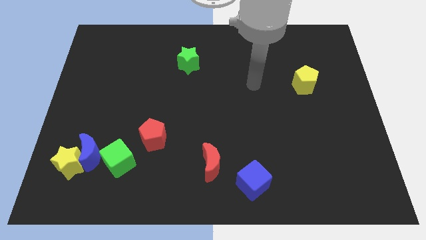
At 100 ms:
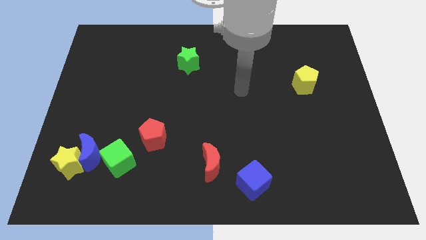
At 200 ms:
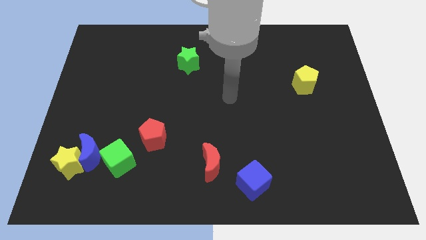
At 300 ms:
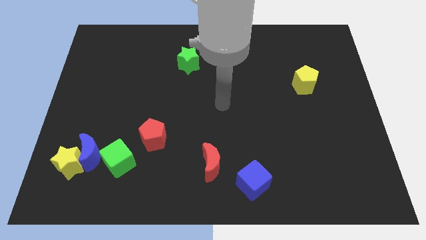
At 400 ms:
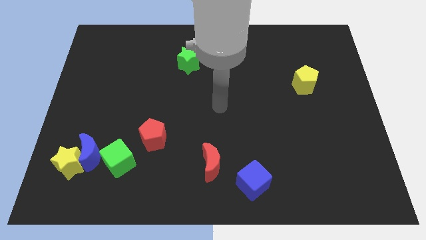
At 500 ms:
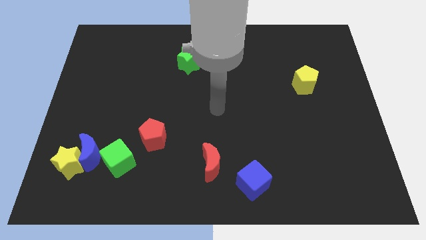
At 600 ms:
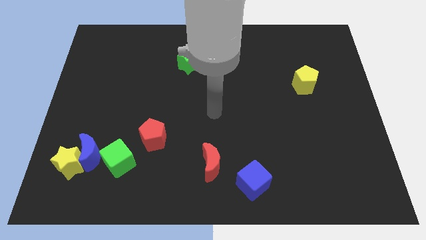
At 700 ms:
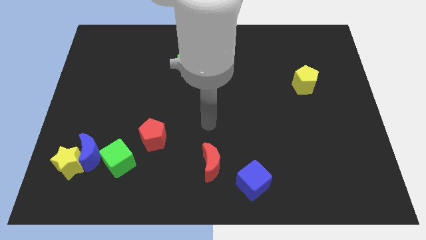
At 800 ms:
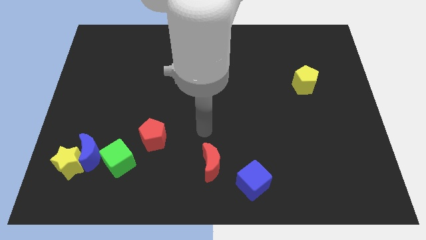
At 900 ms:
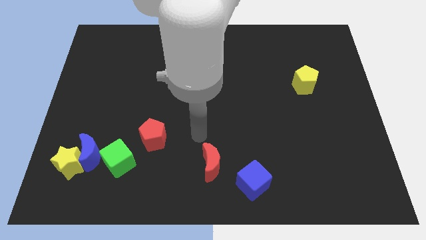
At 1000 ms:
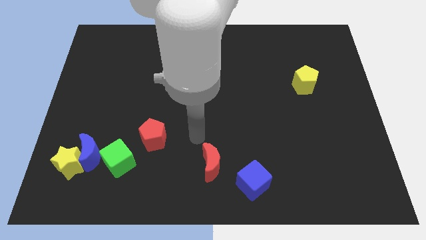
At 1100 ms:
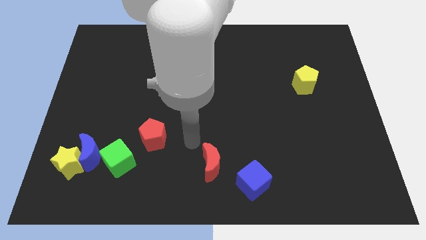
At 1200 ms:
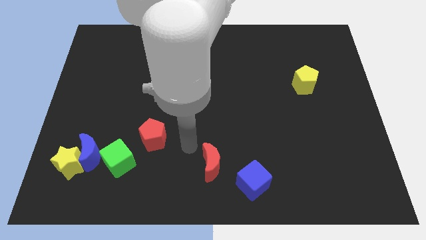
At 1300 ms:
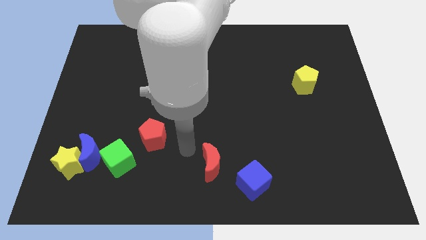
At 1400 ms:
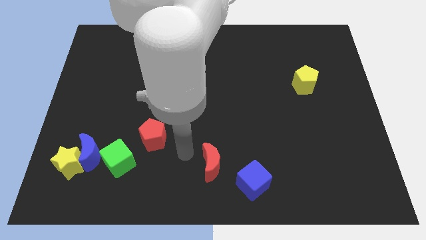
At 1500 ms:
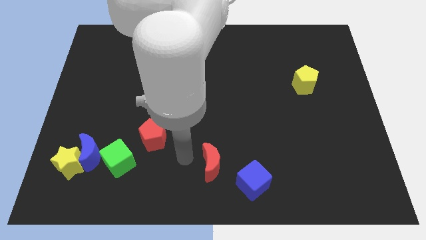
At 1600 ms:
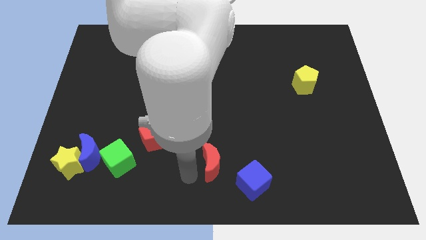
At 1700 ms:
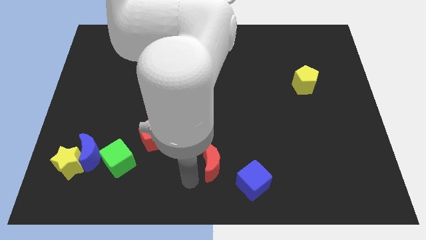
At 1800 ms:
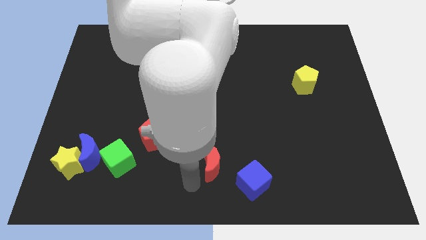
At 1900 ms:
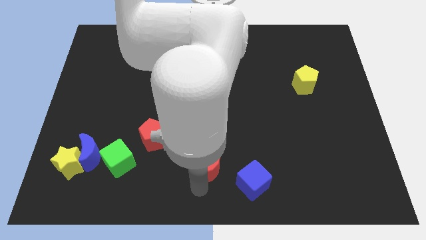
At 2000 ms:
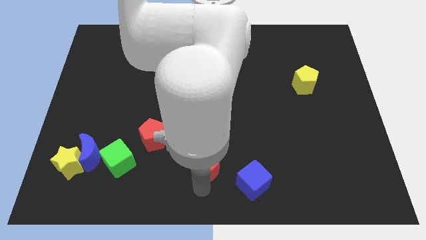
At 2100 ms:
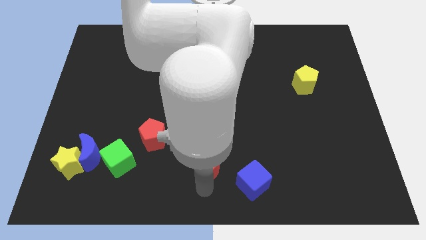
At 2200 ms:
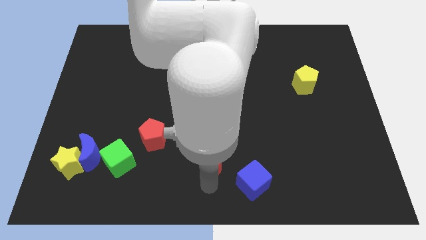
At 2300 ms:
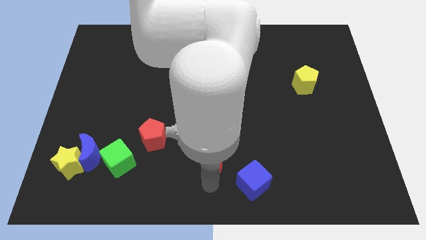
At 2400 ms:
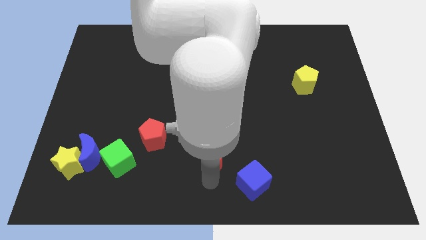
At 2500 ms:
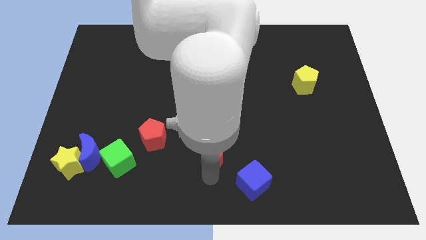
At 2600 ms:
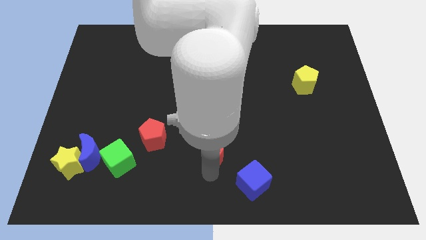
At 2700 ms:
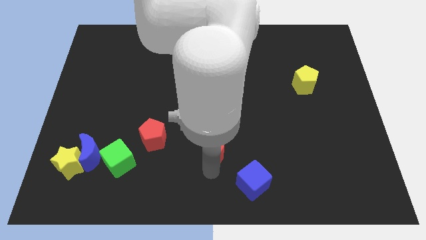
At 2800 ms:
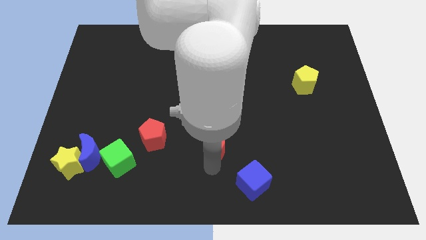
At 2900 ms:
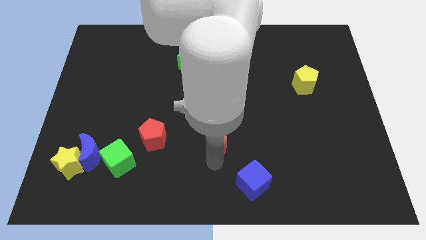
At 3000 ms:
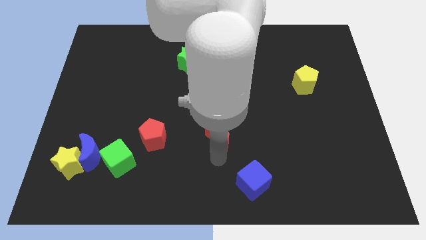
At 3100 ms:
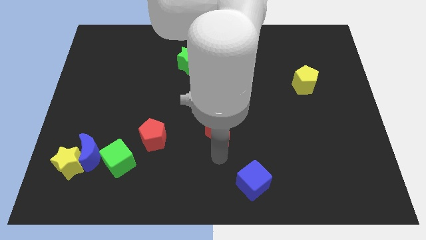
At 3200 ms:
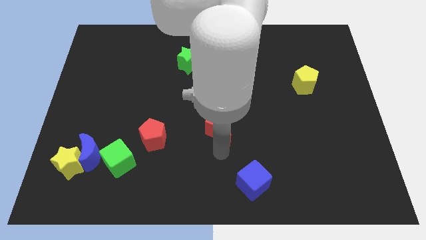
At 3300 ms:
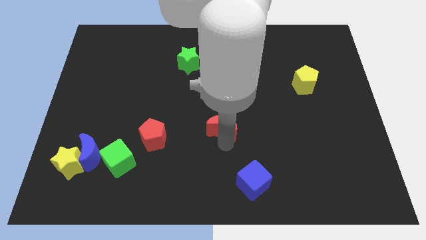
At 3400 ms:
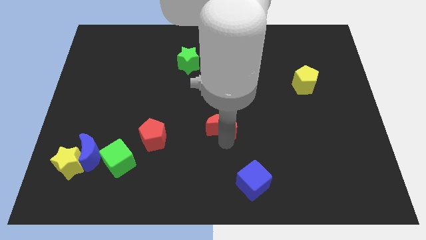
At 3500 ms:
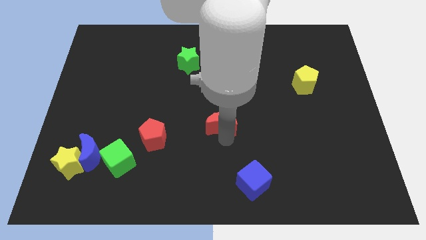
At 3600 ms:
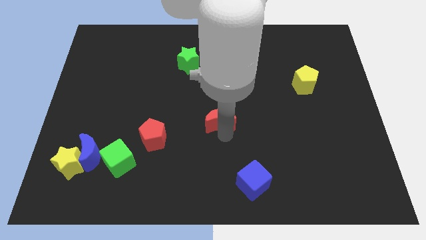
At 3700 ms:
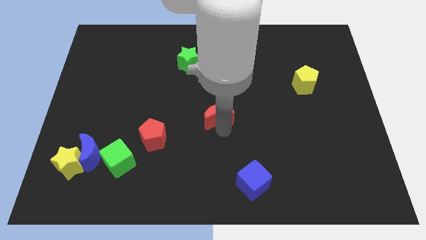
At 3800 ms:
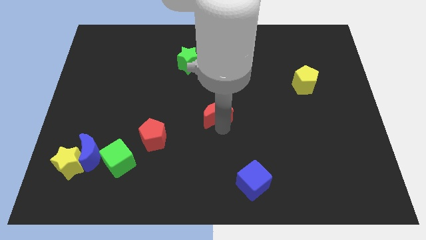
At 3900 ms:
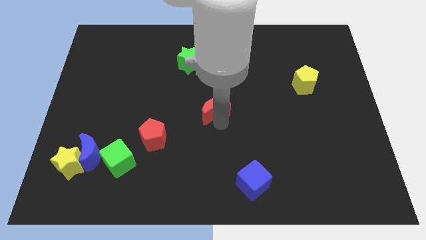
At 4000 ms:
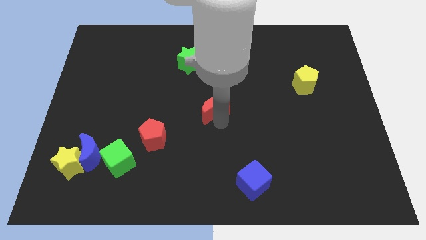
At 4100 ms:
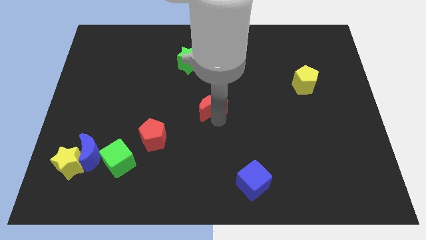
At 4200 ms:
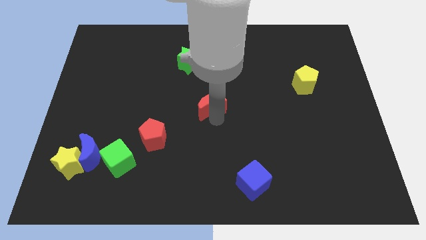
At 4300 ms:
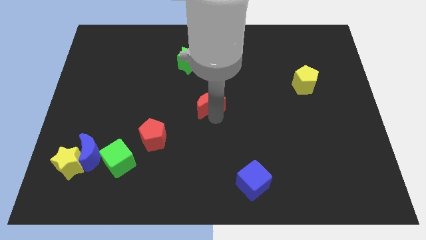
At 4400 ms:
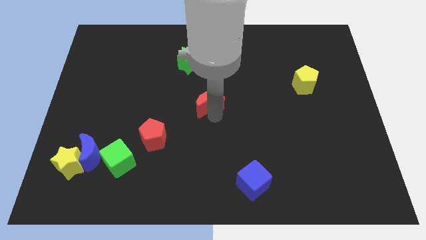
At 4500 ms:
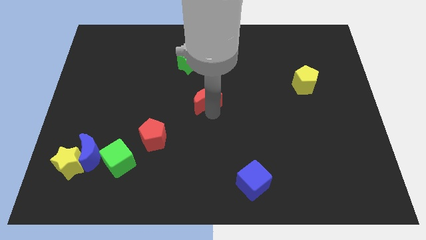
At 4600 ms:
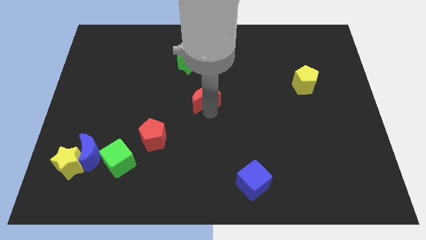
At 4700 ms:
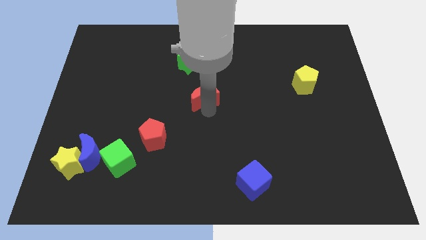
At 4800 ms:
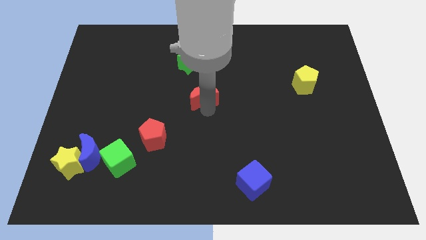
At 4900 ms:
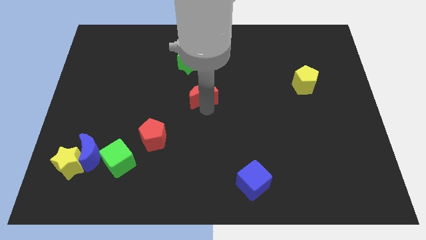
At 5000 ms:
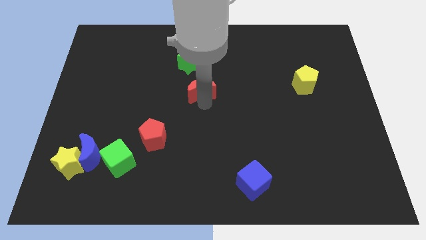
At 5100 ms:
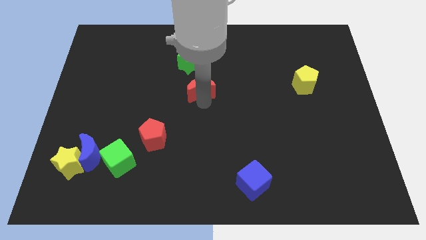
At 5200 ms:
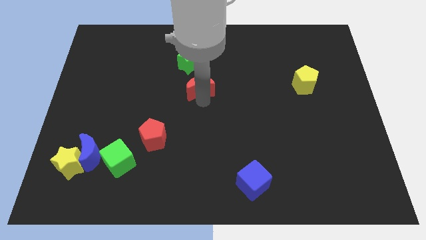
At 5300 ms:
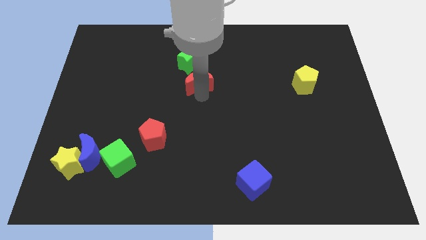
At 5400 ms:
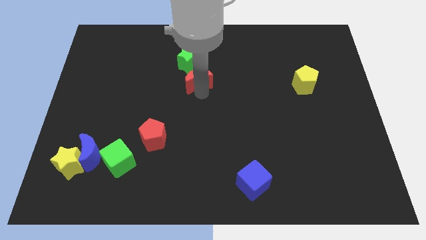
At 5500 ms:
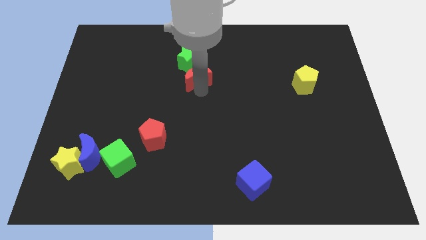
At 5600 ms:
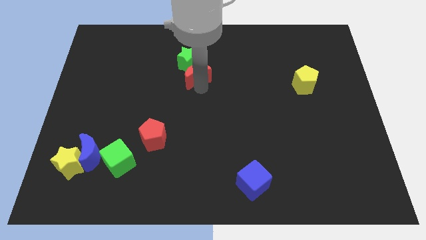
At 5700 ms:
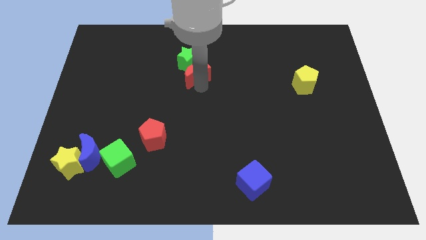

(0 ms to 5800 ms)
slide the red moon next to the green star

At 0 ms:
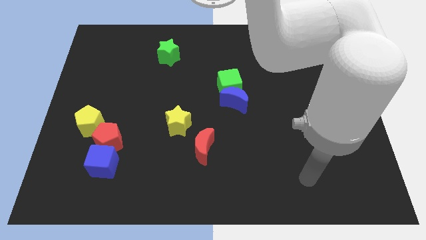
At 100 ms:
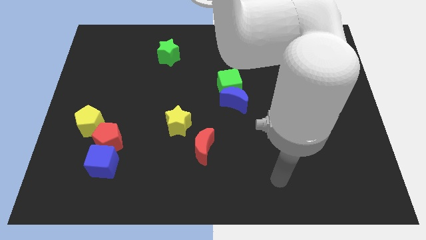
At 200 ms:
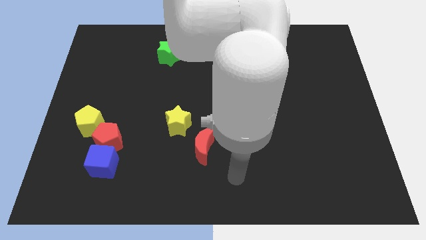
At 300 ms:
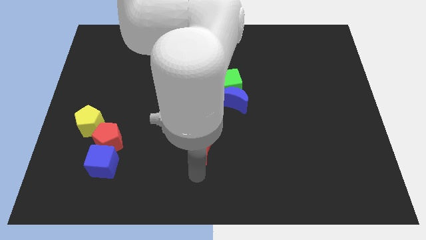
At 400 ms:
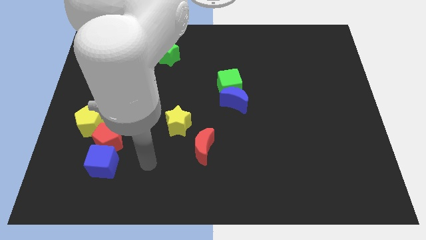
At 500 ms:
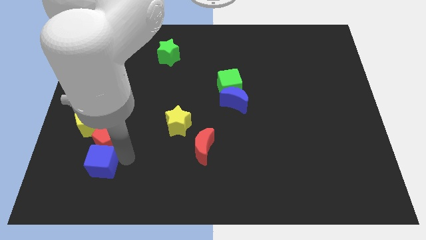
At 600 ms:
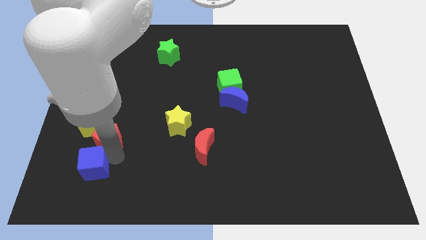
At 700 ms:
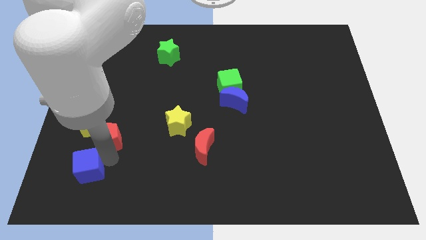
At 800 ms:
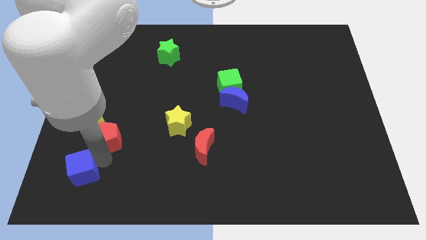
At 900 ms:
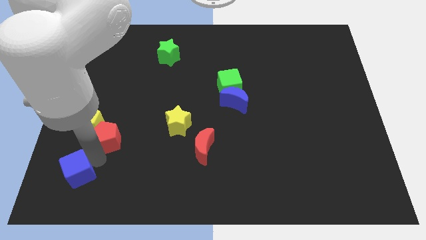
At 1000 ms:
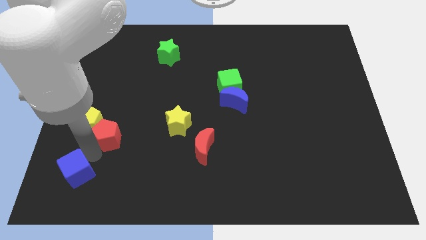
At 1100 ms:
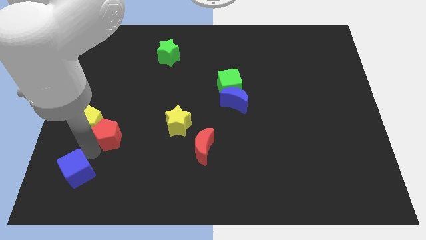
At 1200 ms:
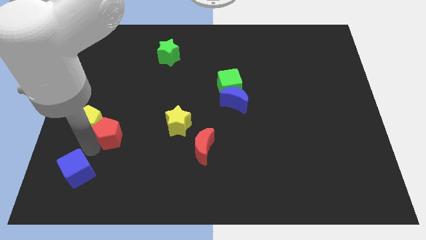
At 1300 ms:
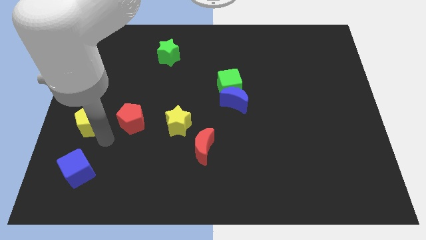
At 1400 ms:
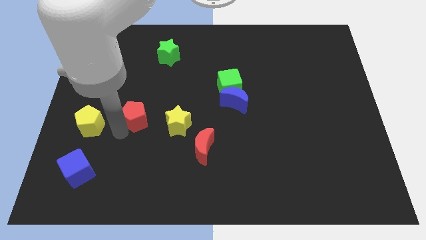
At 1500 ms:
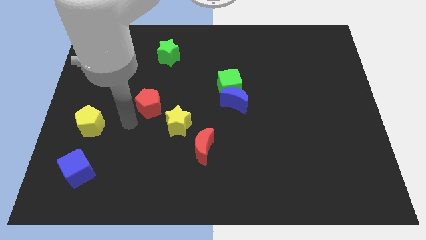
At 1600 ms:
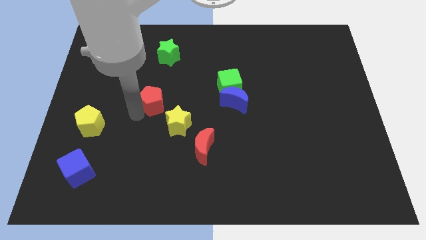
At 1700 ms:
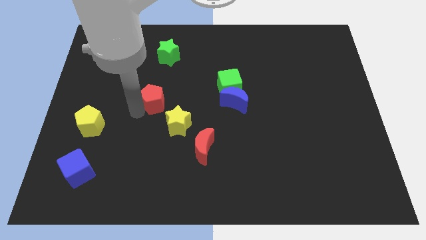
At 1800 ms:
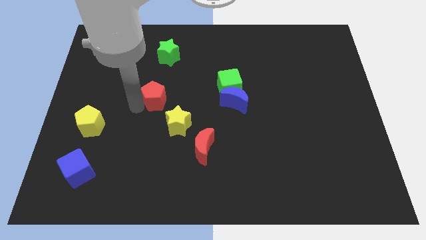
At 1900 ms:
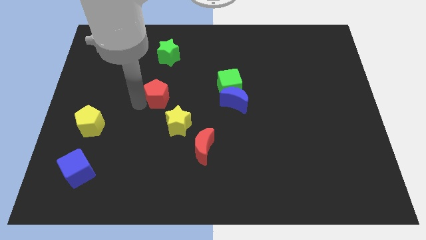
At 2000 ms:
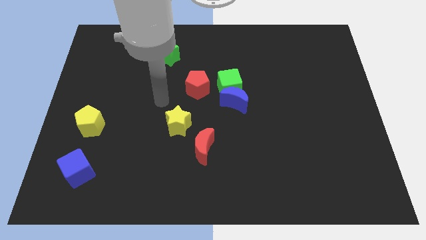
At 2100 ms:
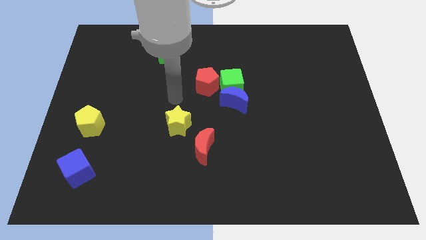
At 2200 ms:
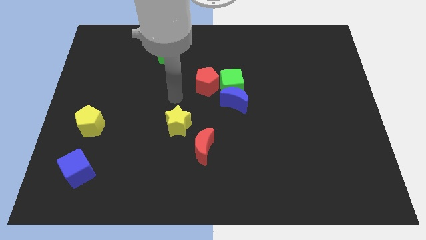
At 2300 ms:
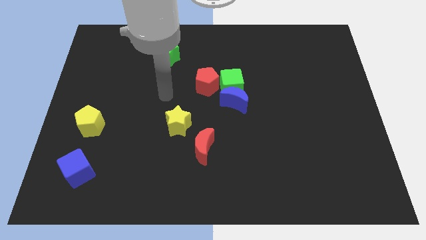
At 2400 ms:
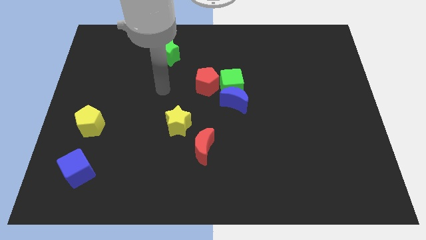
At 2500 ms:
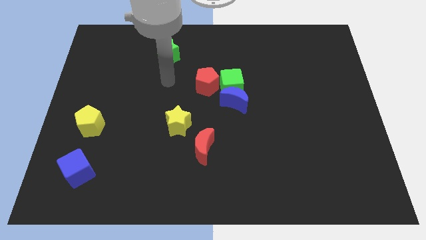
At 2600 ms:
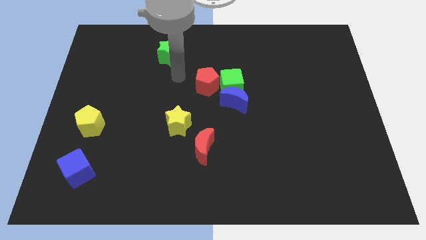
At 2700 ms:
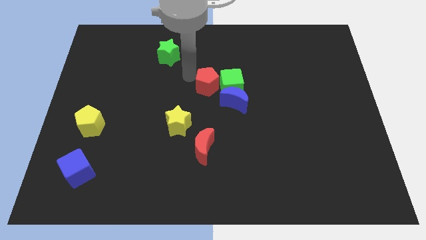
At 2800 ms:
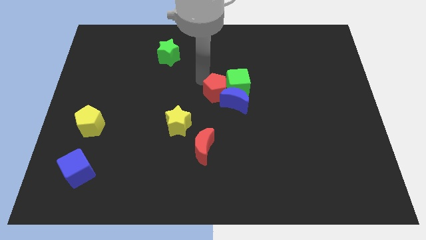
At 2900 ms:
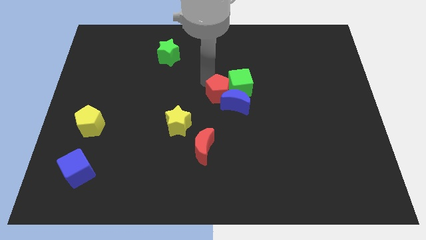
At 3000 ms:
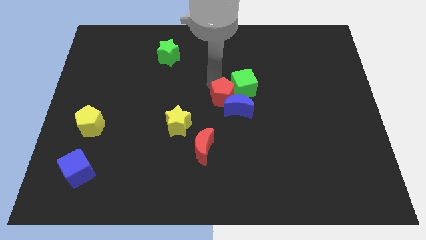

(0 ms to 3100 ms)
put the red pentagon close to the blue moon
